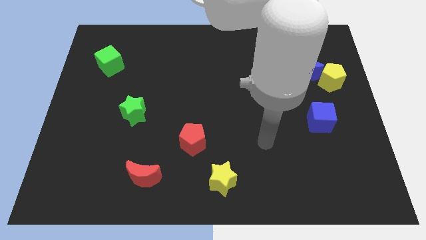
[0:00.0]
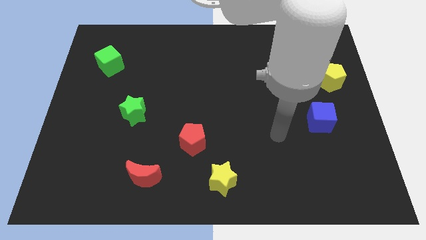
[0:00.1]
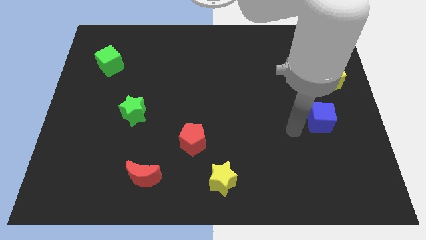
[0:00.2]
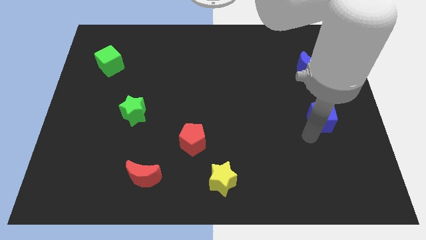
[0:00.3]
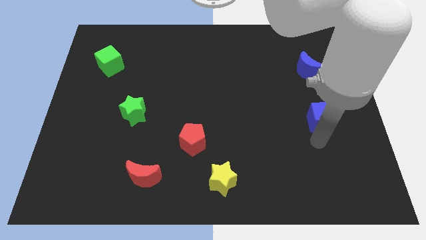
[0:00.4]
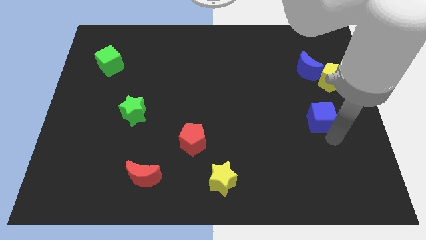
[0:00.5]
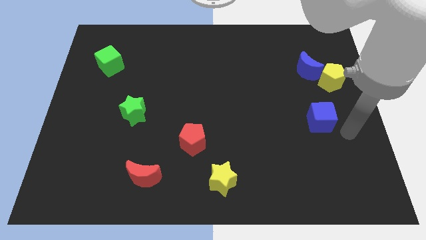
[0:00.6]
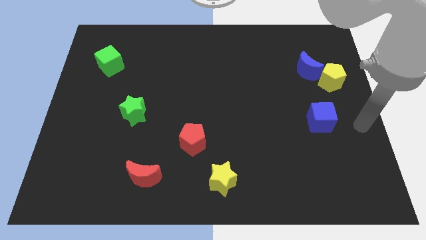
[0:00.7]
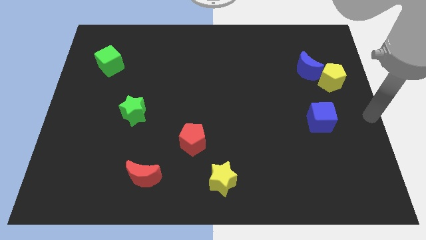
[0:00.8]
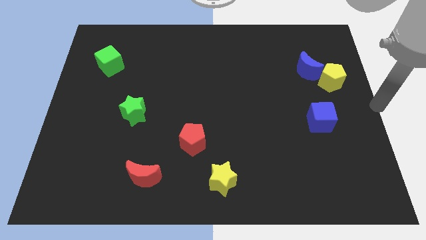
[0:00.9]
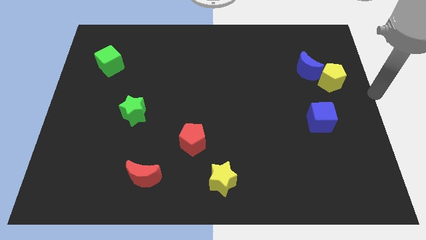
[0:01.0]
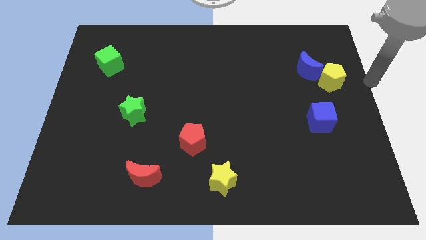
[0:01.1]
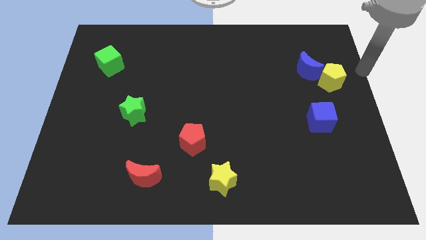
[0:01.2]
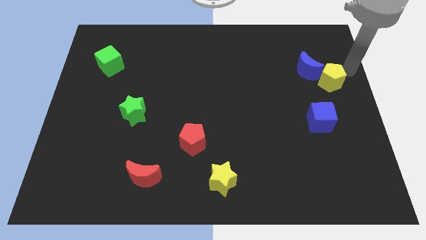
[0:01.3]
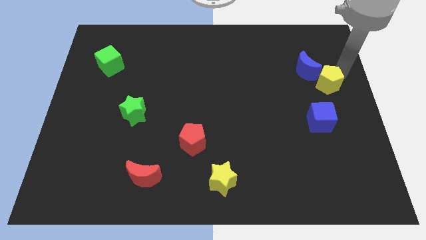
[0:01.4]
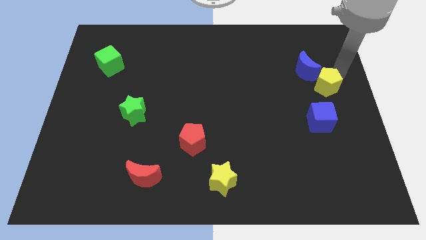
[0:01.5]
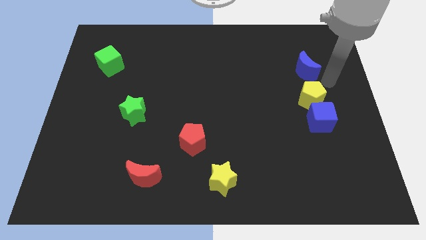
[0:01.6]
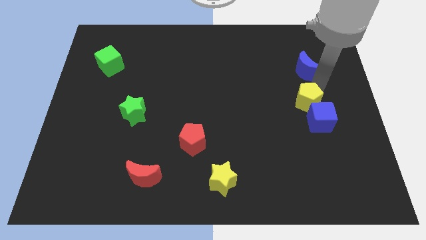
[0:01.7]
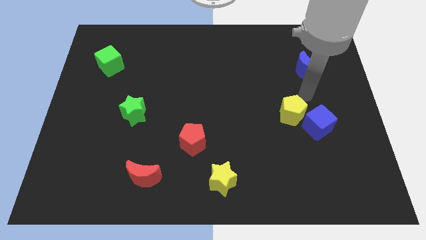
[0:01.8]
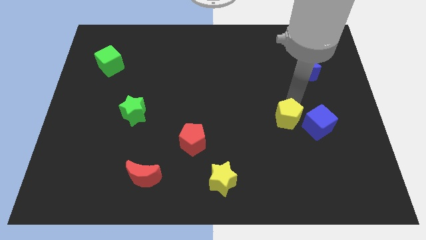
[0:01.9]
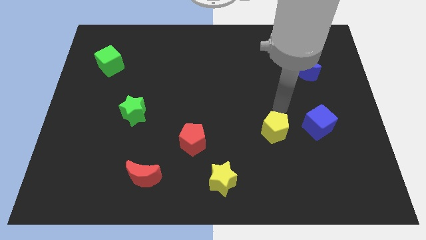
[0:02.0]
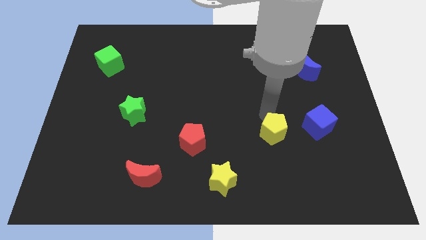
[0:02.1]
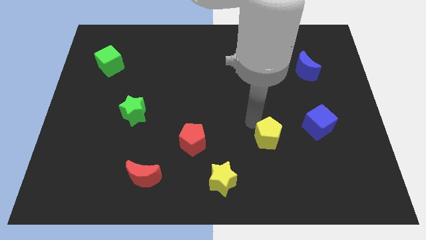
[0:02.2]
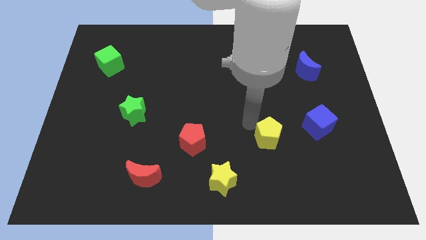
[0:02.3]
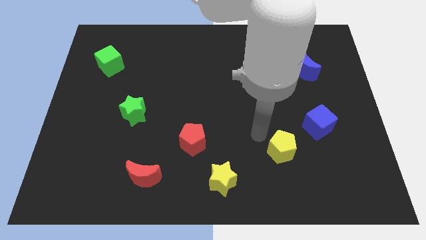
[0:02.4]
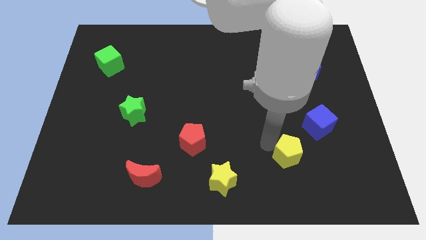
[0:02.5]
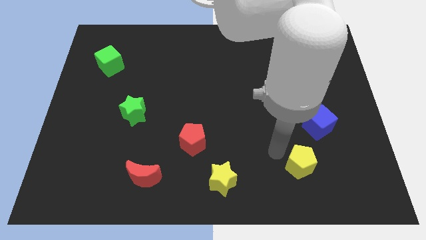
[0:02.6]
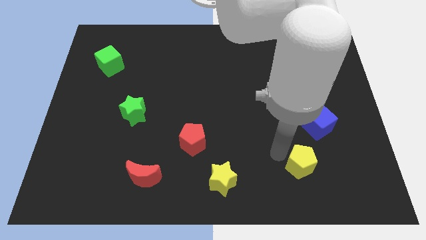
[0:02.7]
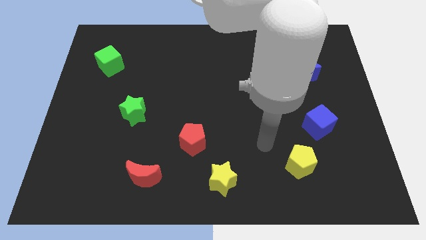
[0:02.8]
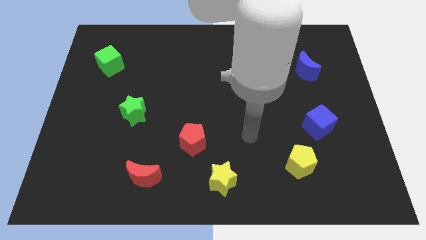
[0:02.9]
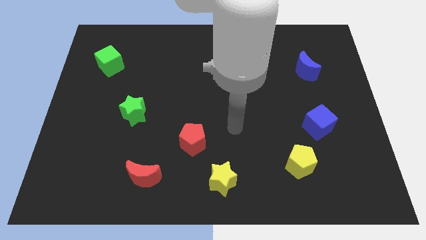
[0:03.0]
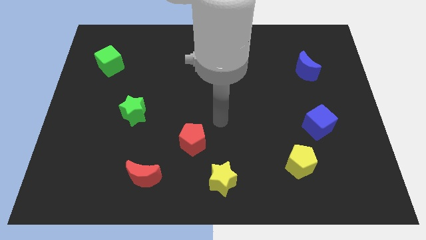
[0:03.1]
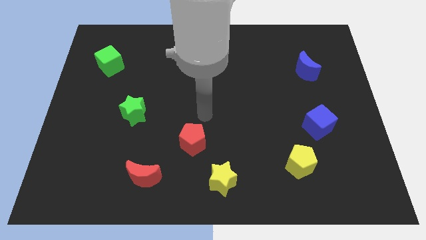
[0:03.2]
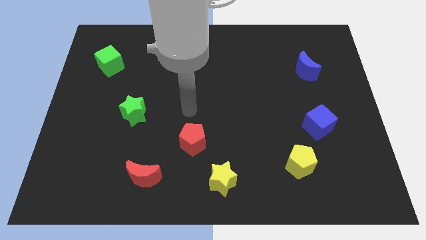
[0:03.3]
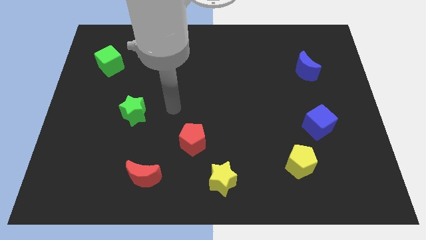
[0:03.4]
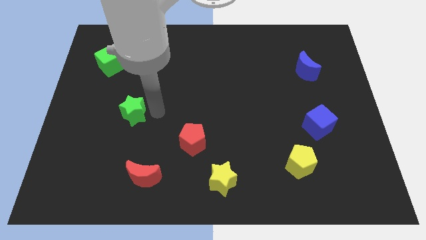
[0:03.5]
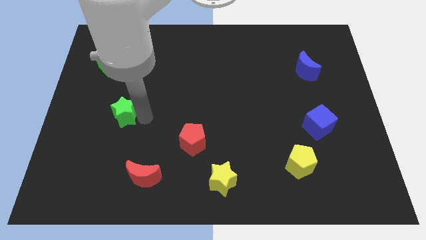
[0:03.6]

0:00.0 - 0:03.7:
move the yellow pentagon away from the blue moon

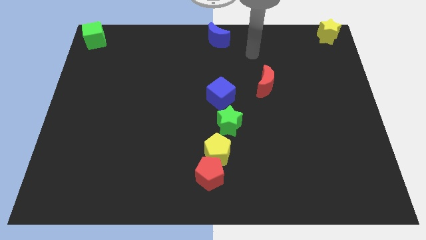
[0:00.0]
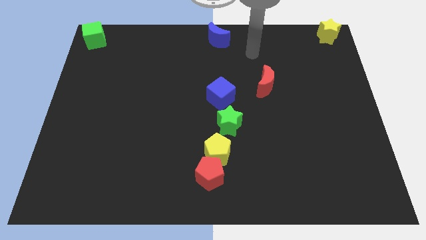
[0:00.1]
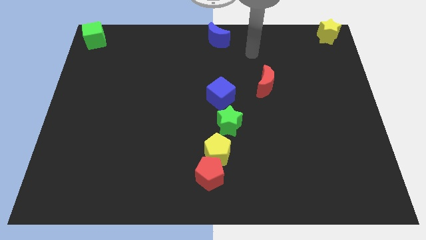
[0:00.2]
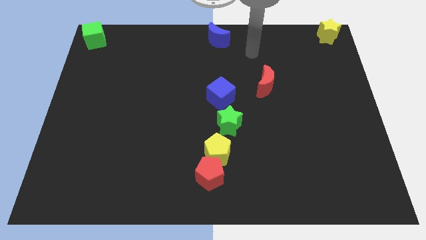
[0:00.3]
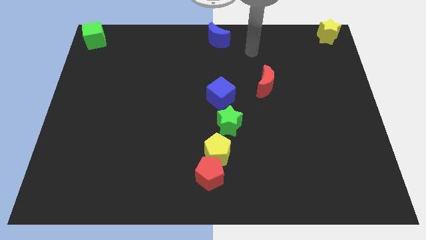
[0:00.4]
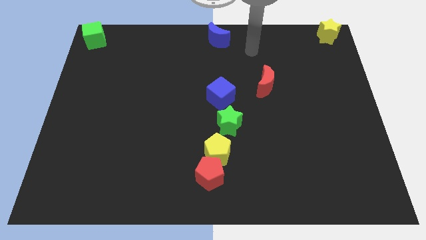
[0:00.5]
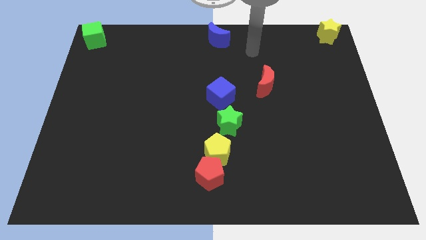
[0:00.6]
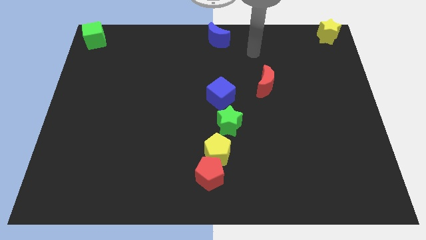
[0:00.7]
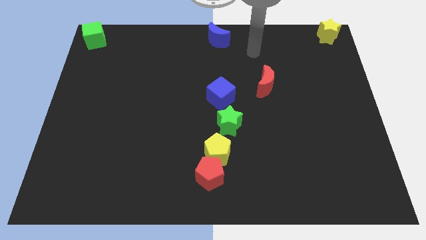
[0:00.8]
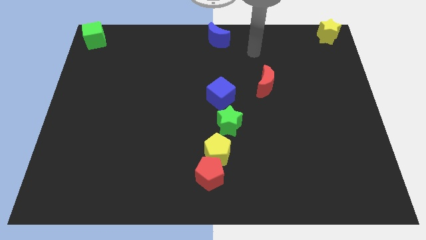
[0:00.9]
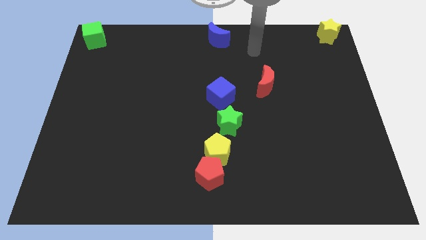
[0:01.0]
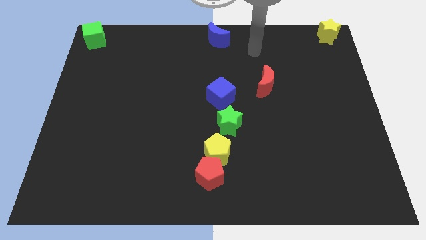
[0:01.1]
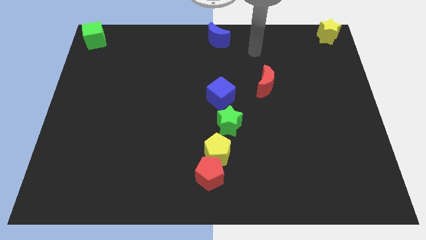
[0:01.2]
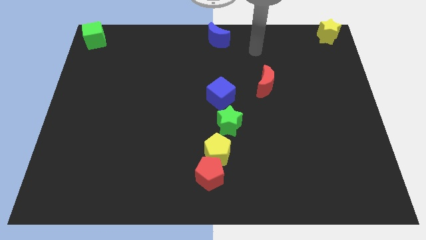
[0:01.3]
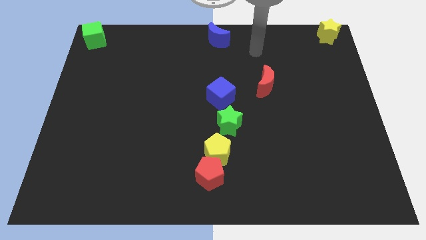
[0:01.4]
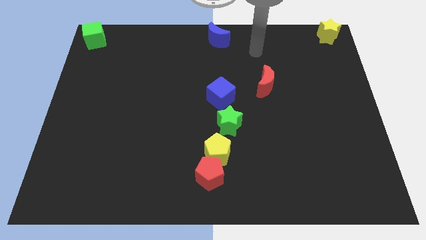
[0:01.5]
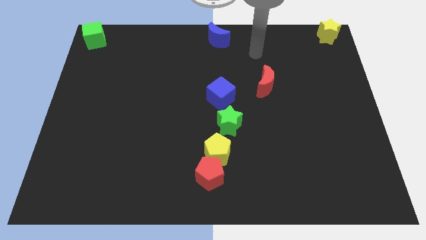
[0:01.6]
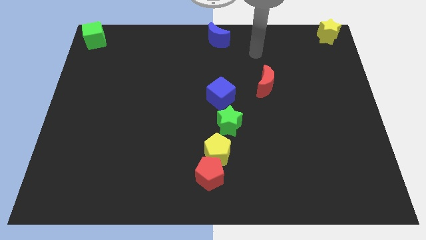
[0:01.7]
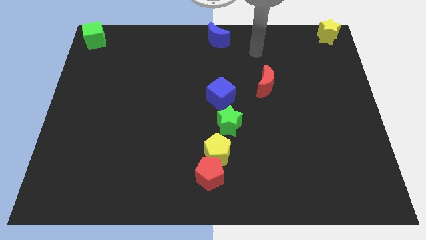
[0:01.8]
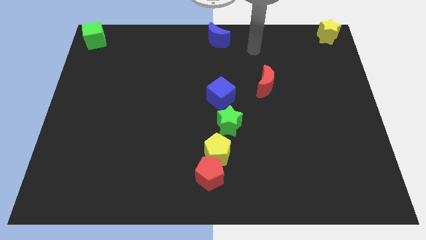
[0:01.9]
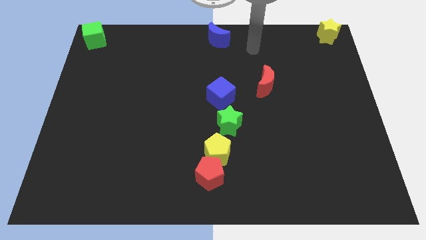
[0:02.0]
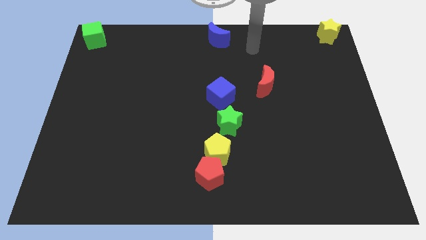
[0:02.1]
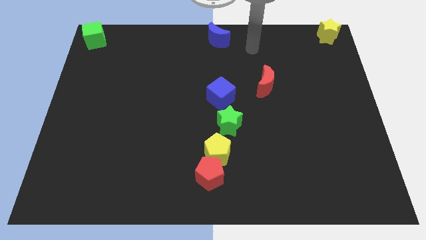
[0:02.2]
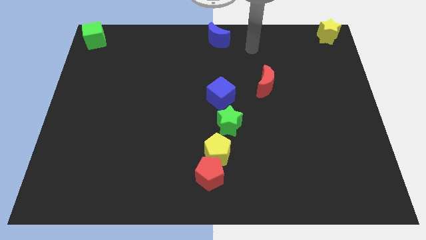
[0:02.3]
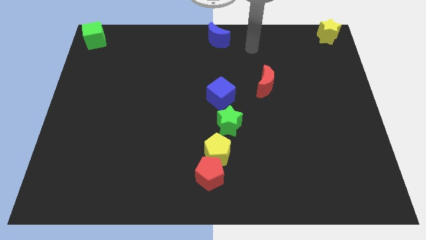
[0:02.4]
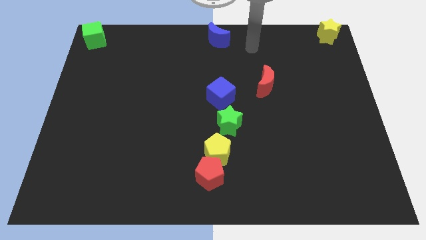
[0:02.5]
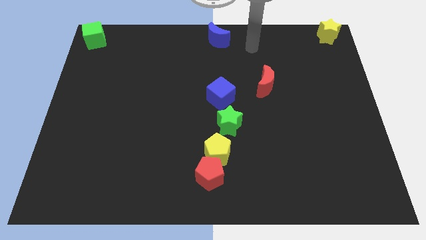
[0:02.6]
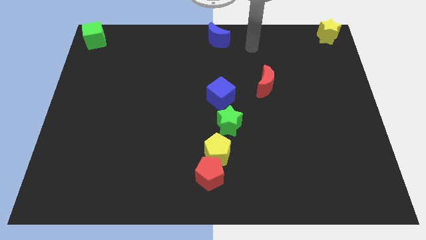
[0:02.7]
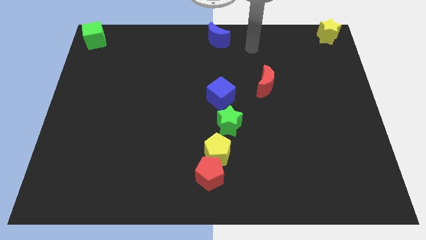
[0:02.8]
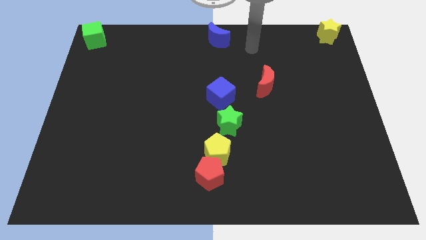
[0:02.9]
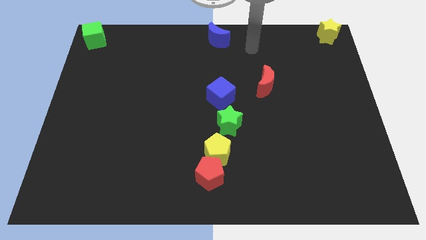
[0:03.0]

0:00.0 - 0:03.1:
slightly move your arm between red and blue moon

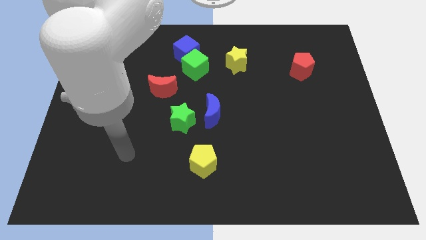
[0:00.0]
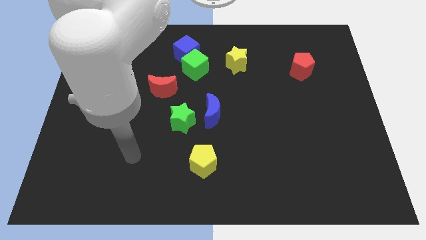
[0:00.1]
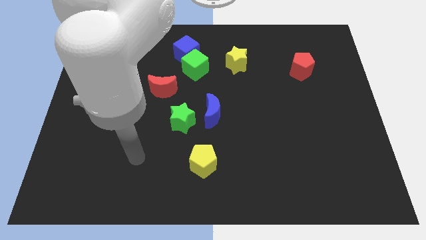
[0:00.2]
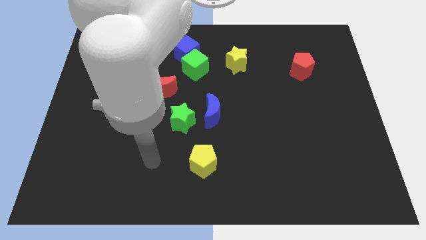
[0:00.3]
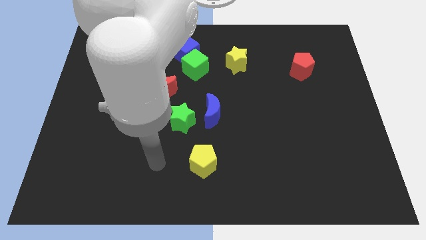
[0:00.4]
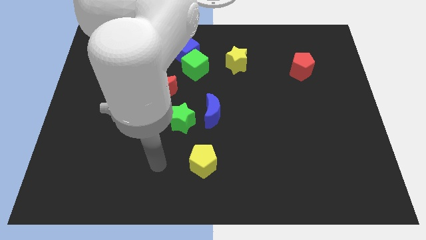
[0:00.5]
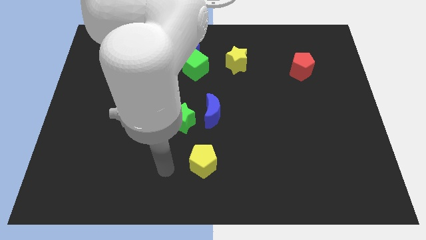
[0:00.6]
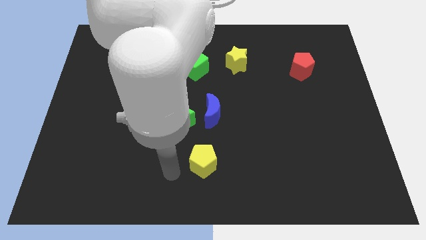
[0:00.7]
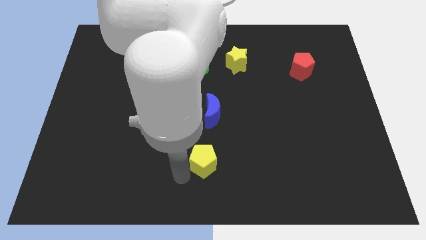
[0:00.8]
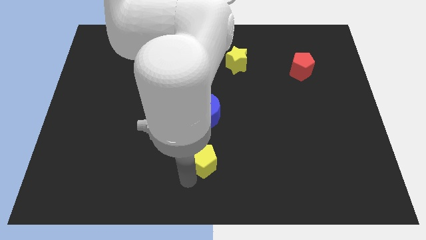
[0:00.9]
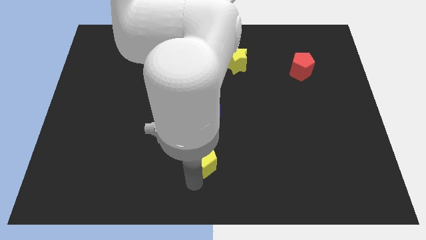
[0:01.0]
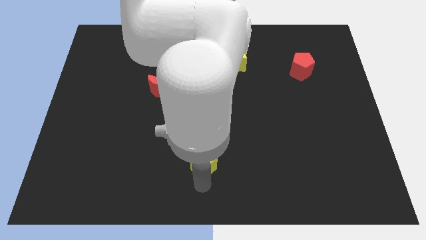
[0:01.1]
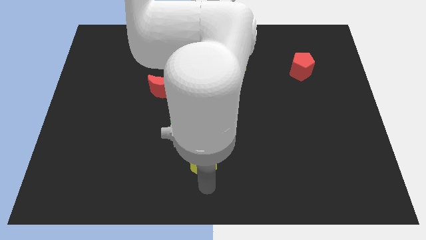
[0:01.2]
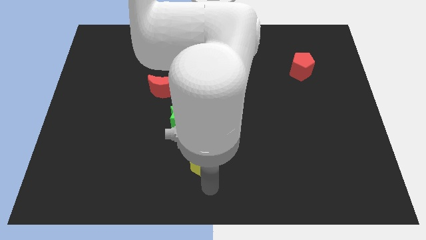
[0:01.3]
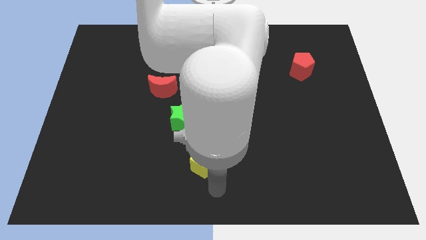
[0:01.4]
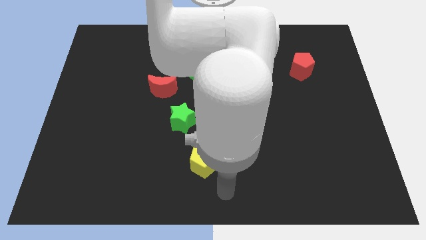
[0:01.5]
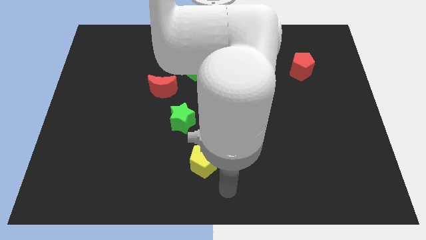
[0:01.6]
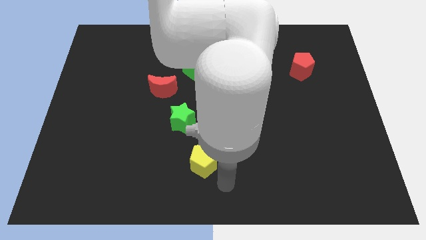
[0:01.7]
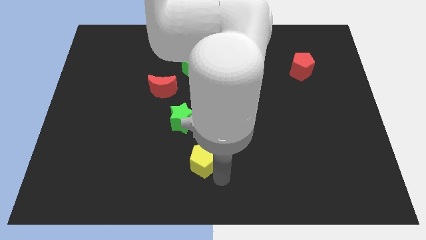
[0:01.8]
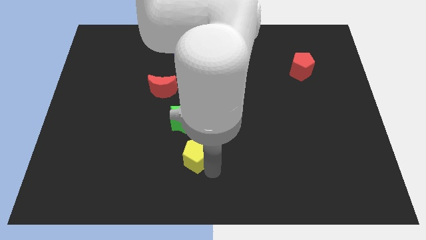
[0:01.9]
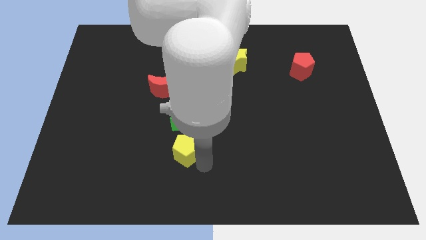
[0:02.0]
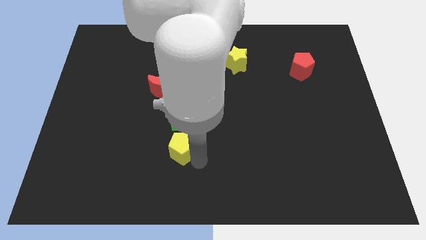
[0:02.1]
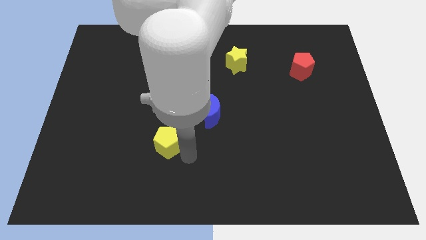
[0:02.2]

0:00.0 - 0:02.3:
move the yellow pentagon below the green star
